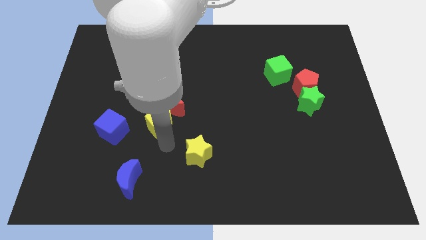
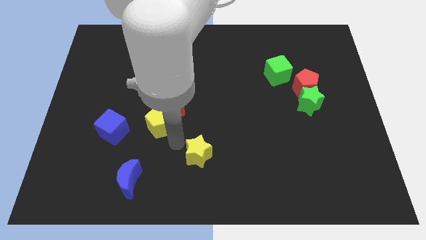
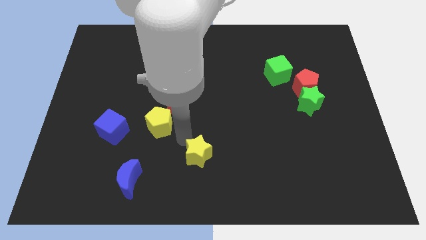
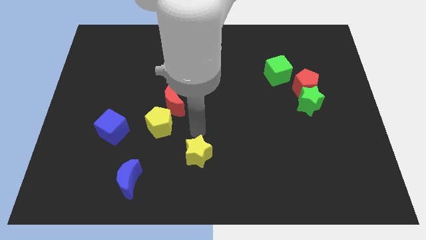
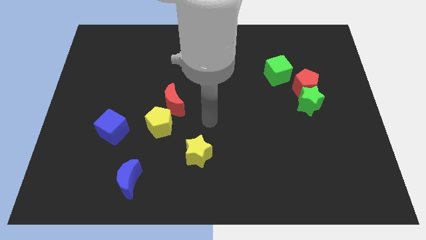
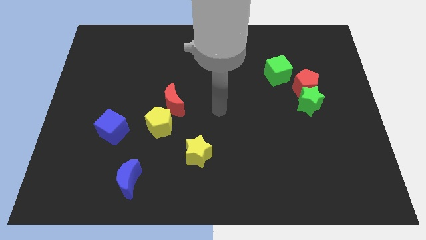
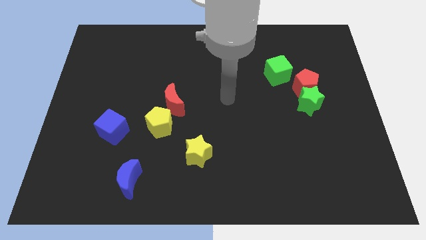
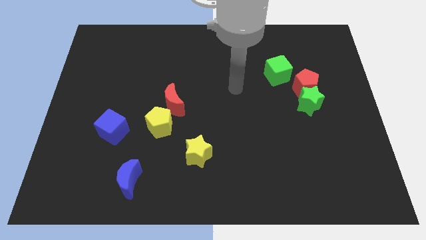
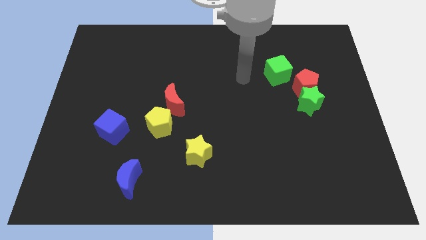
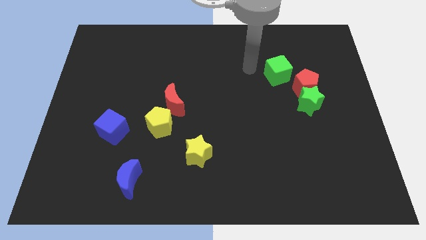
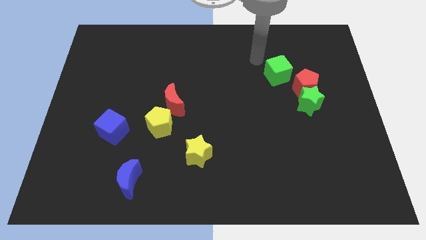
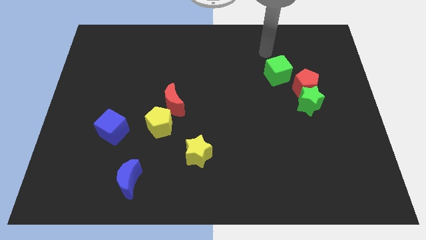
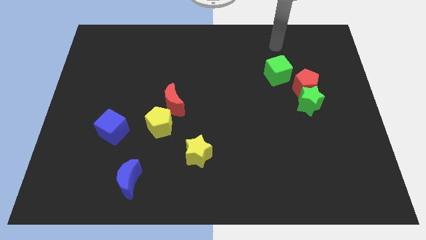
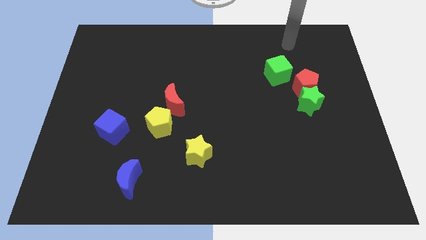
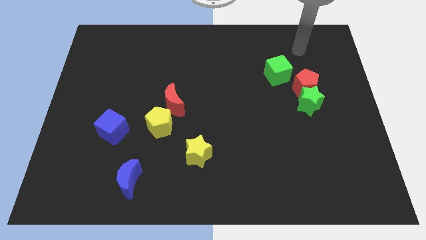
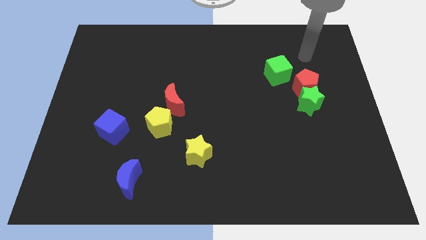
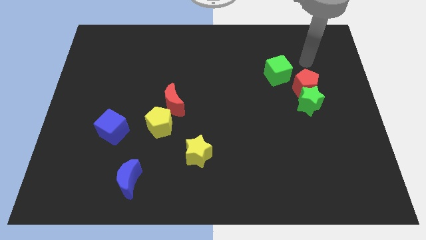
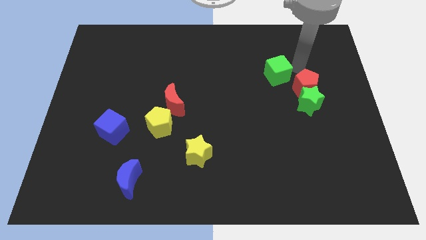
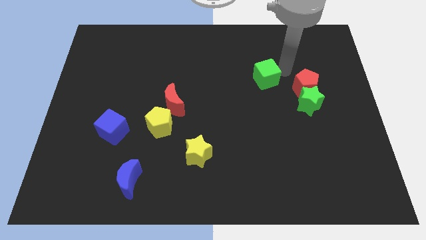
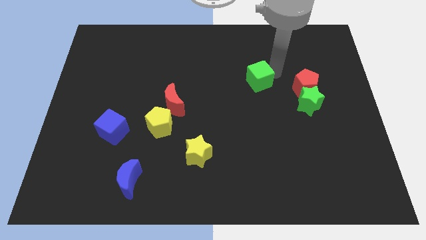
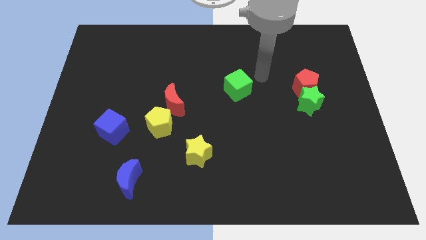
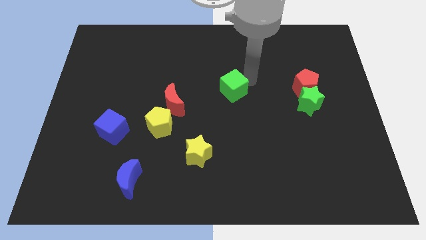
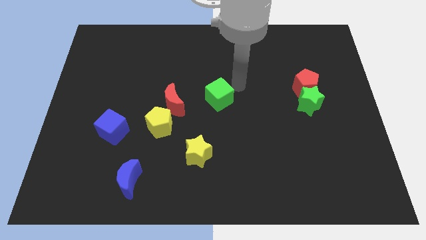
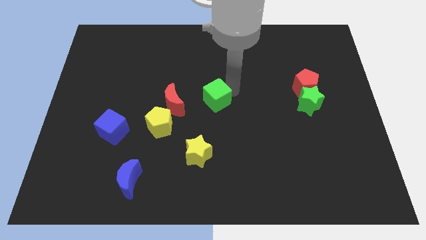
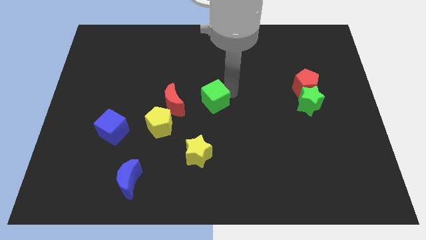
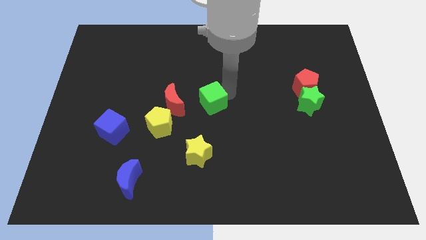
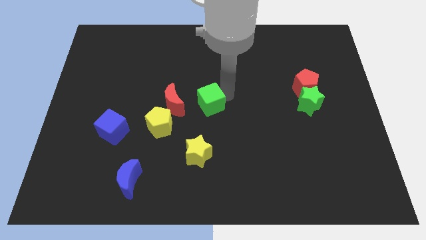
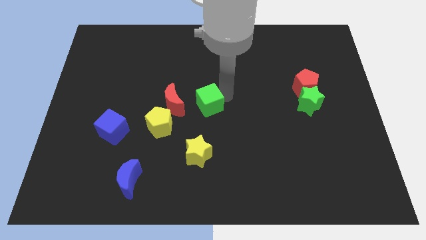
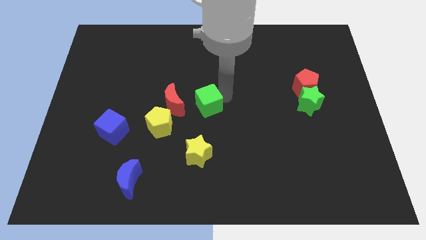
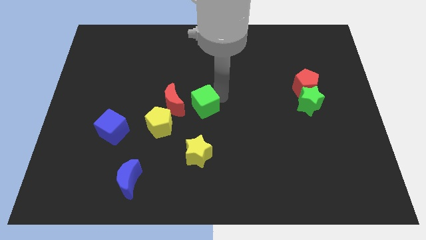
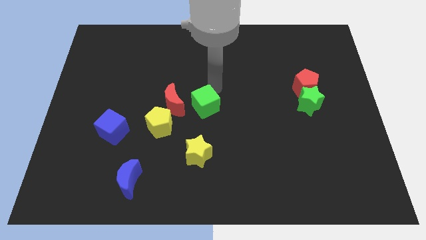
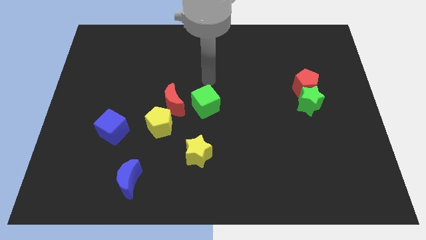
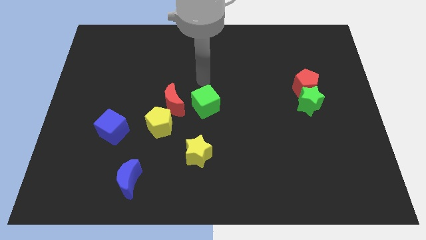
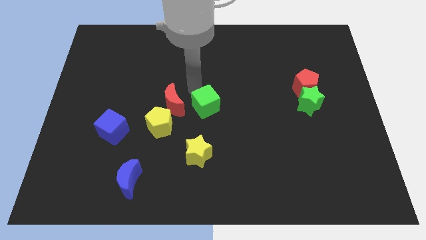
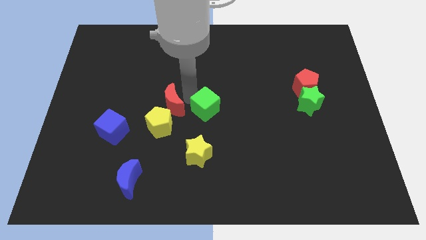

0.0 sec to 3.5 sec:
place the green cube to the right side of the red crescent

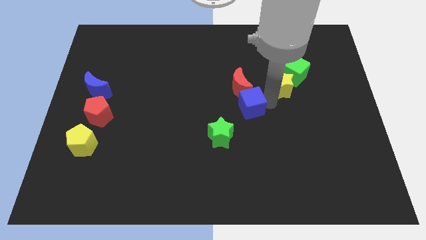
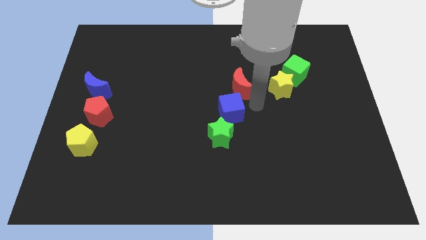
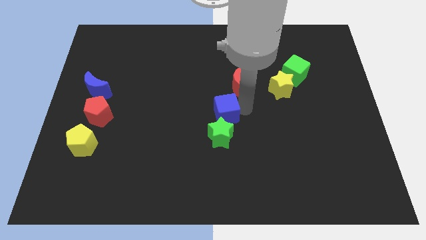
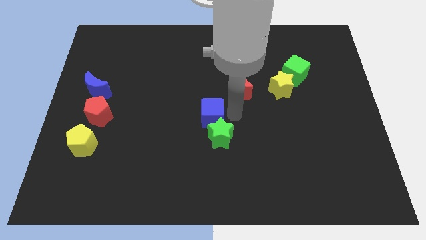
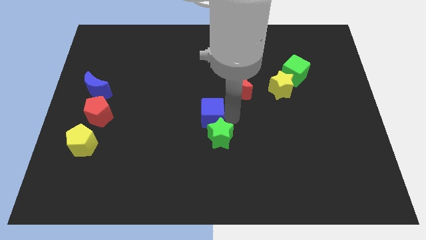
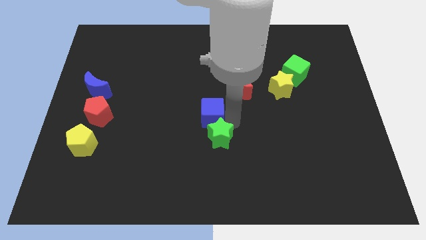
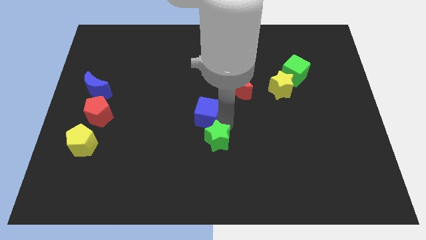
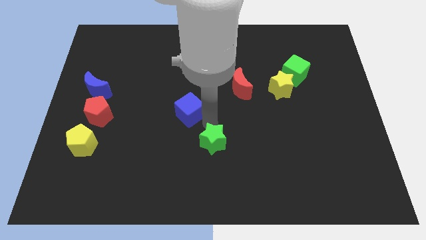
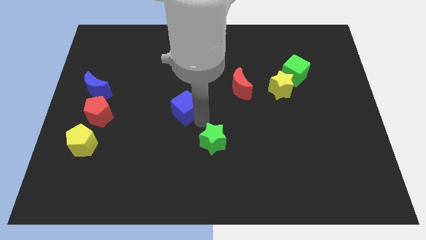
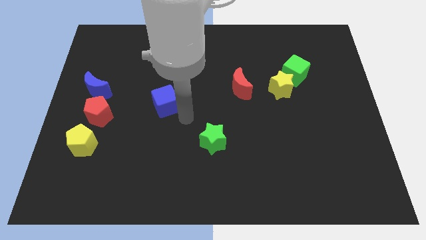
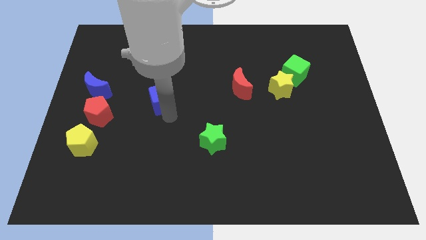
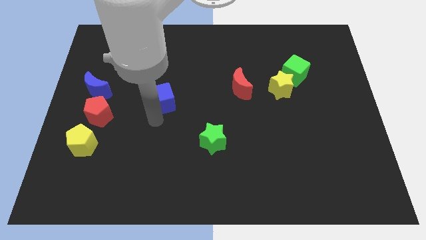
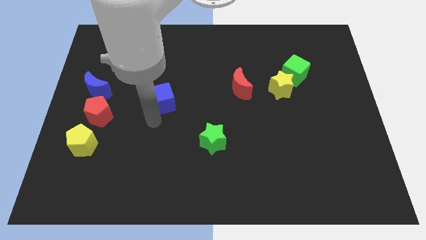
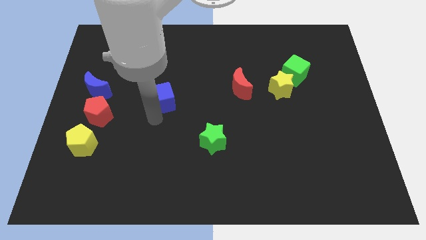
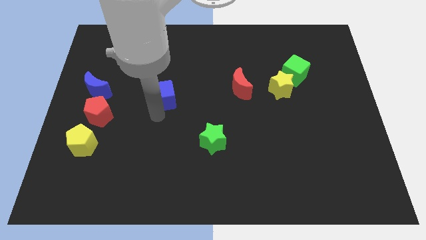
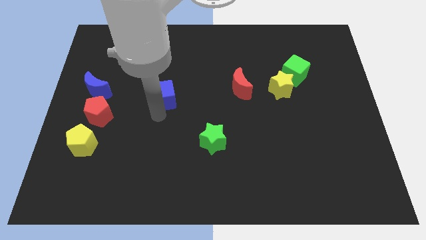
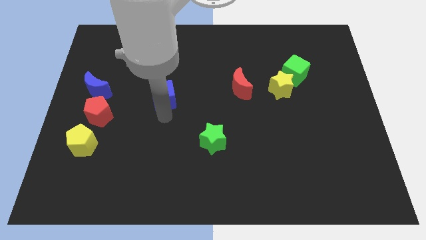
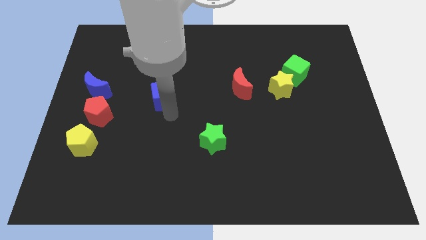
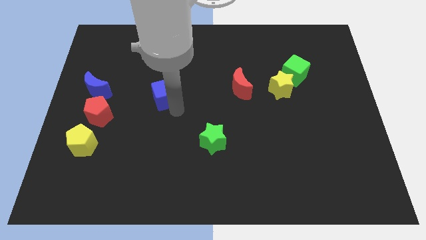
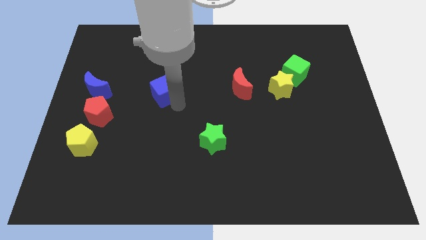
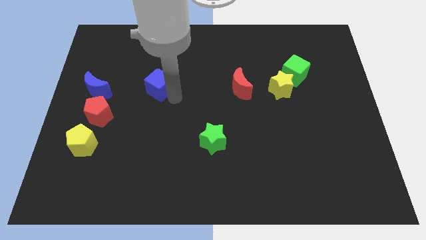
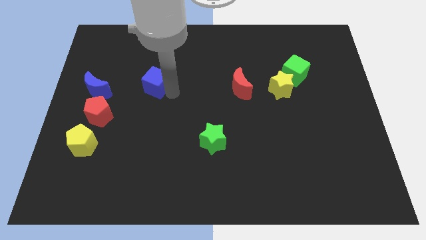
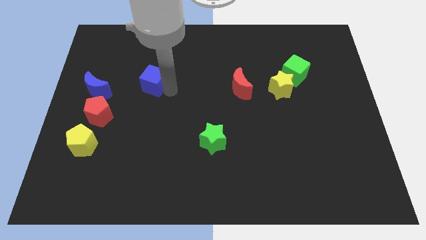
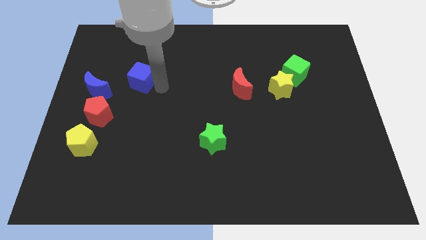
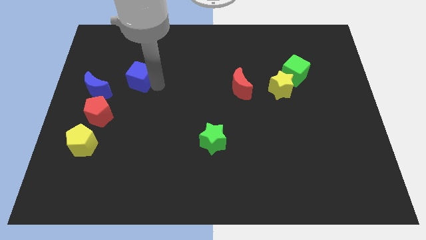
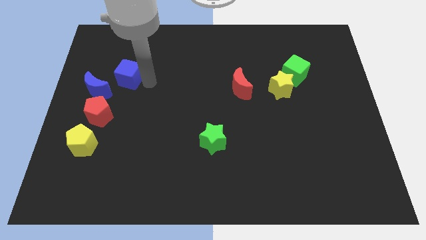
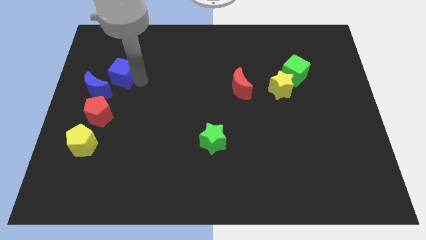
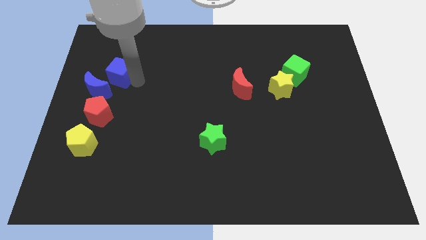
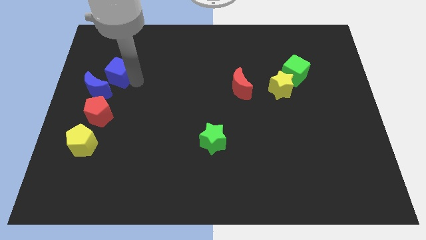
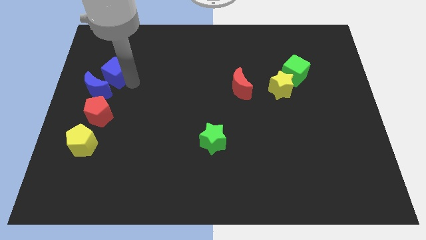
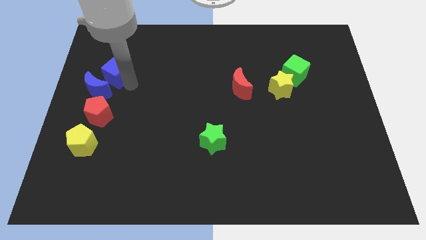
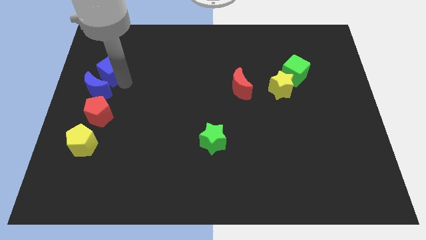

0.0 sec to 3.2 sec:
slide the blue cube diagonally top left to the green star

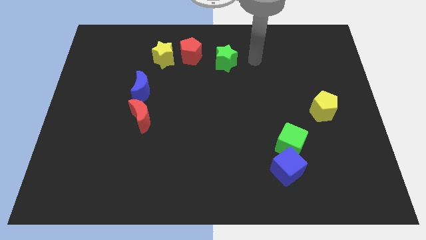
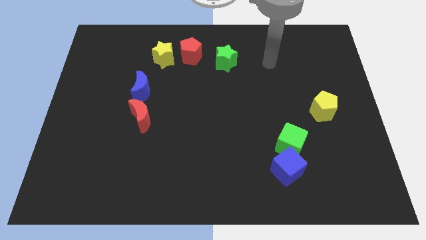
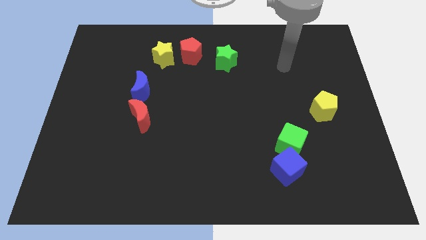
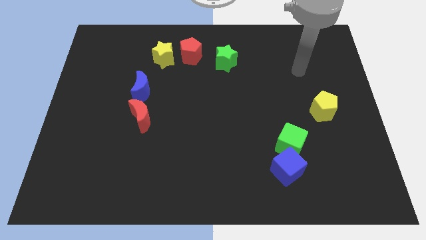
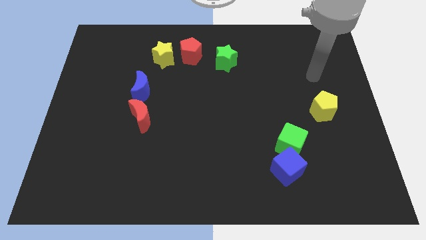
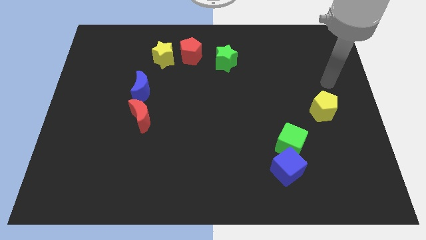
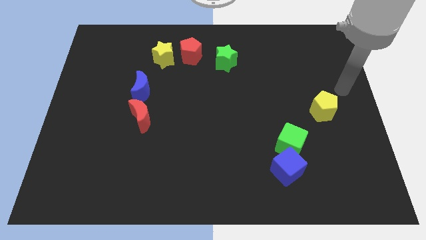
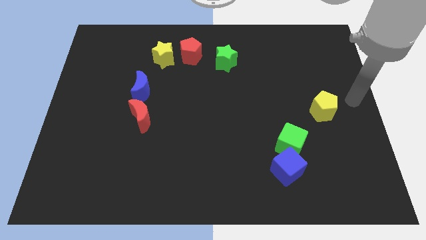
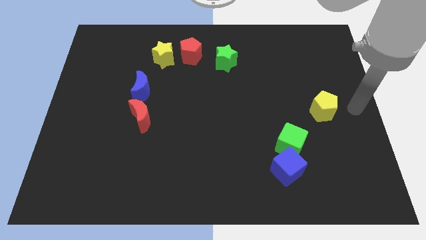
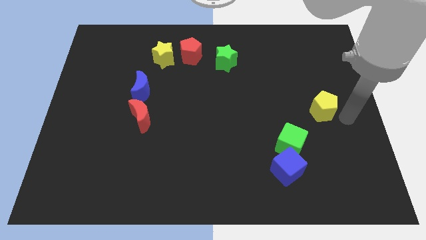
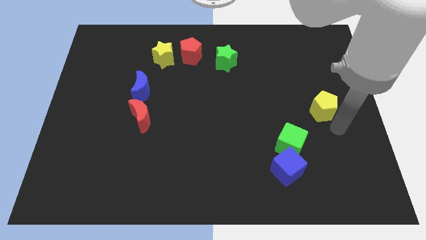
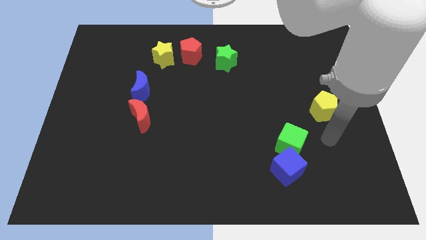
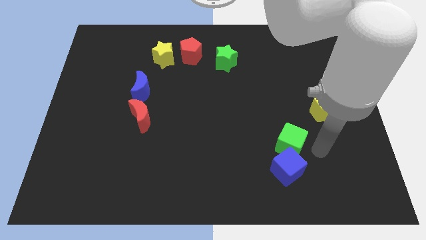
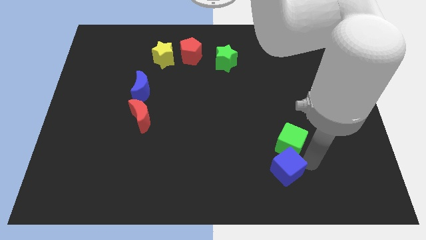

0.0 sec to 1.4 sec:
move your arm towards the blue cube

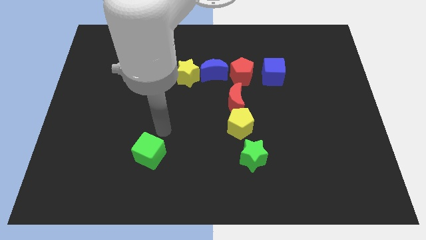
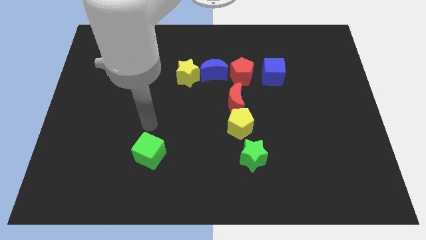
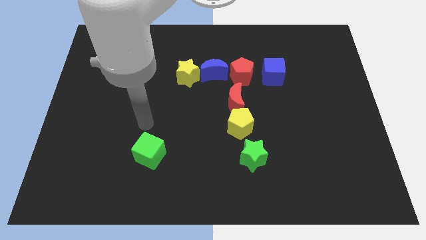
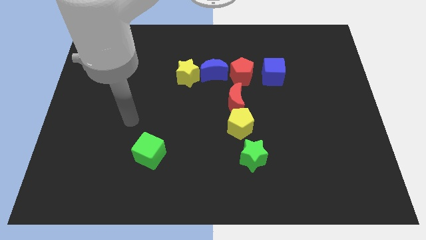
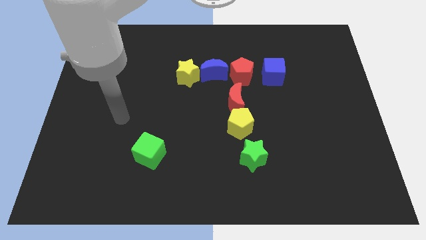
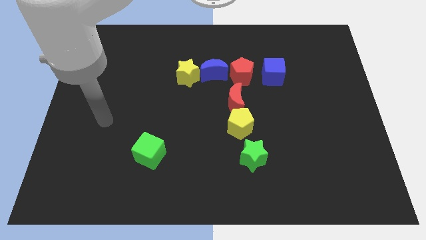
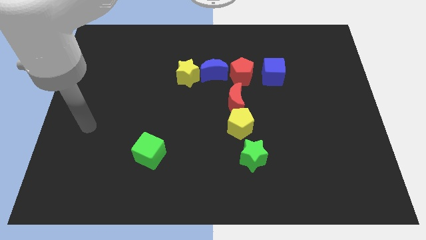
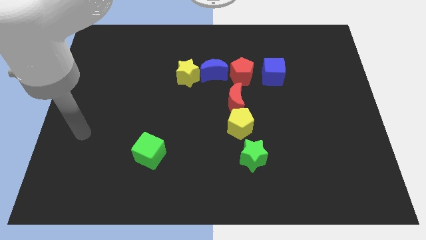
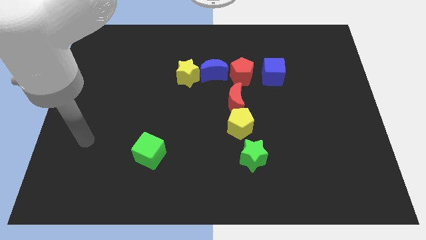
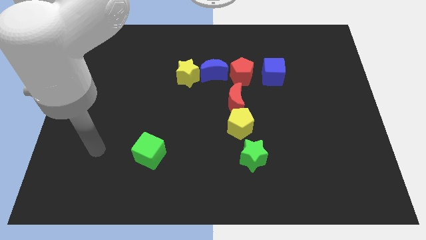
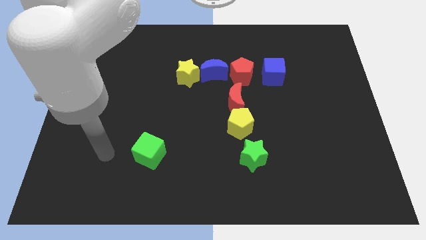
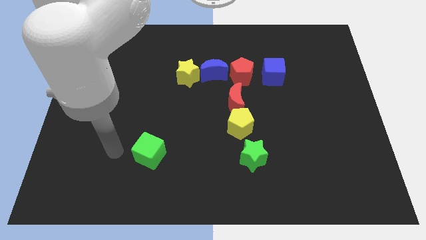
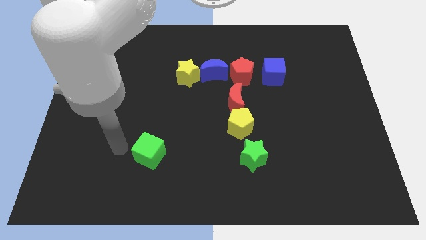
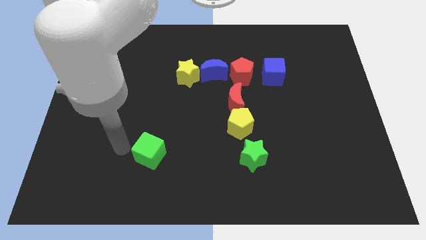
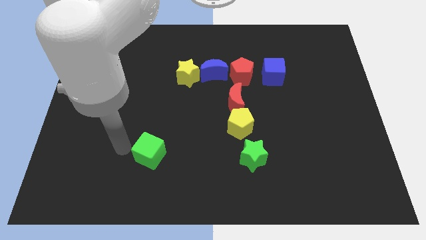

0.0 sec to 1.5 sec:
move the arm to the left side of the green cube
